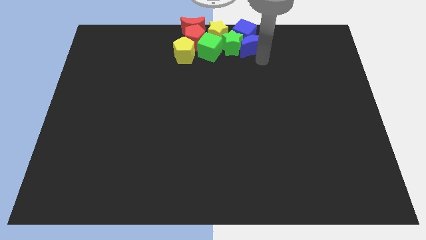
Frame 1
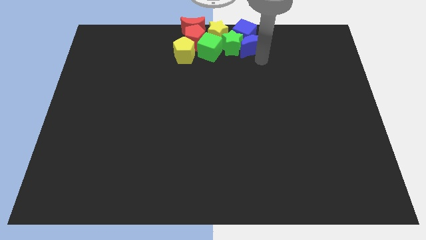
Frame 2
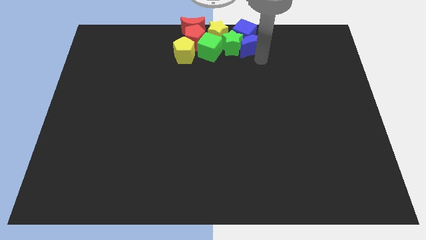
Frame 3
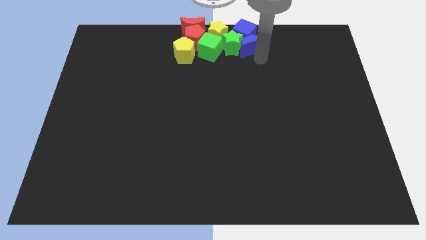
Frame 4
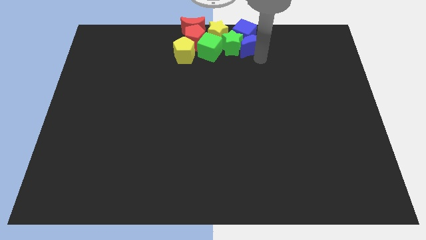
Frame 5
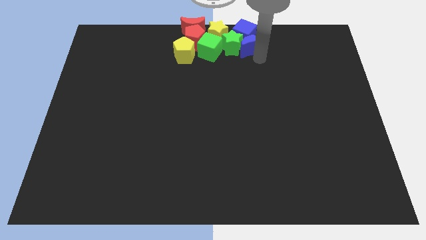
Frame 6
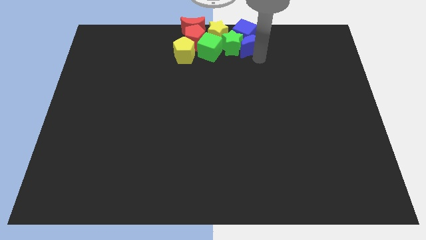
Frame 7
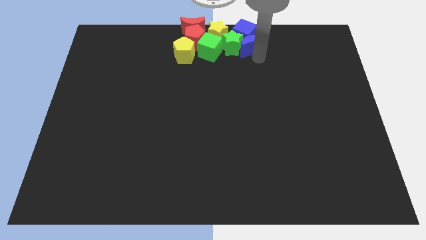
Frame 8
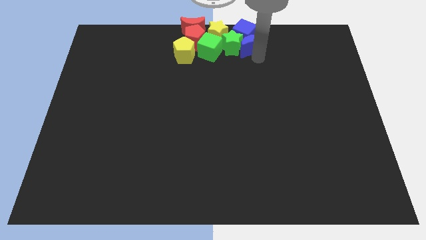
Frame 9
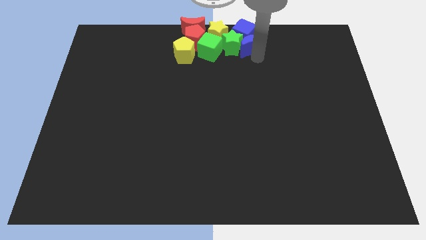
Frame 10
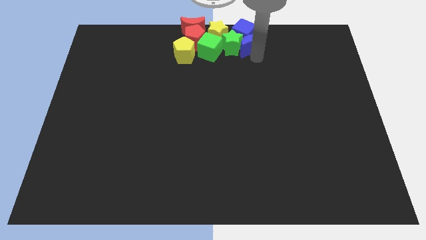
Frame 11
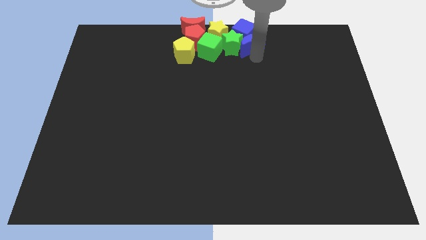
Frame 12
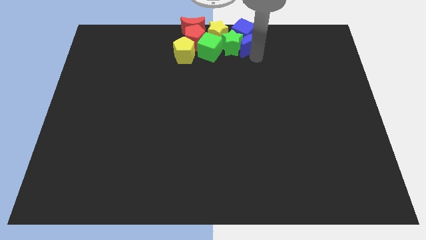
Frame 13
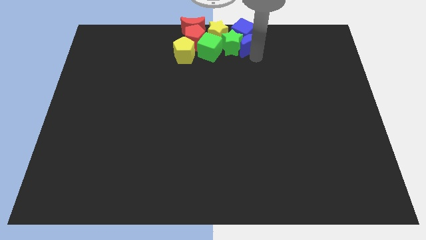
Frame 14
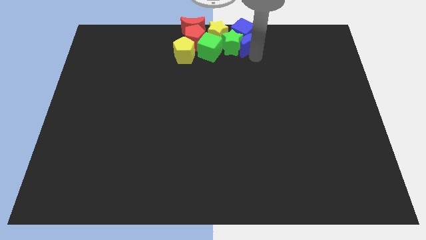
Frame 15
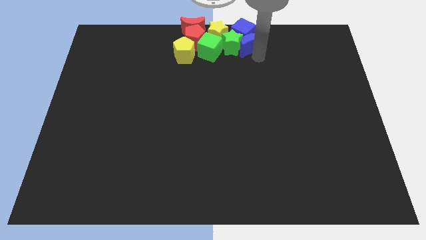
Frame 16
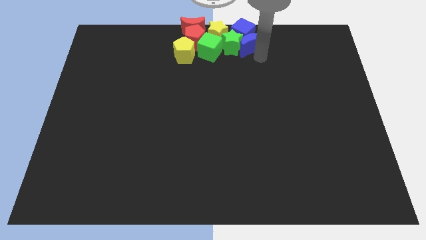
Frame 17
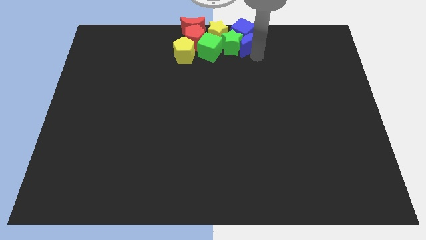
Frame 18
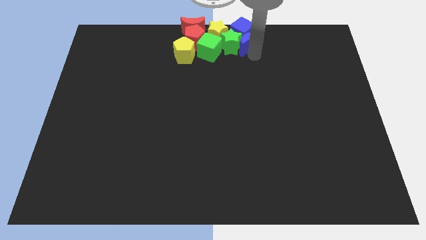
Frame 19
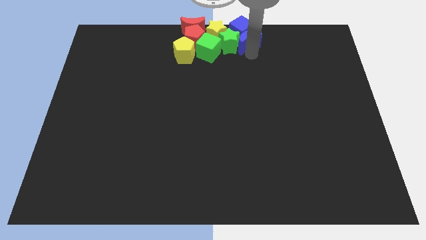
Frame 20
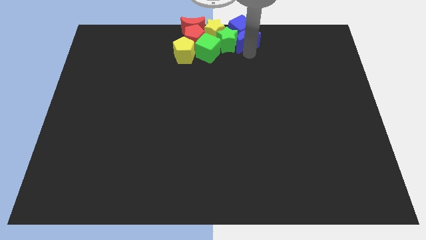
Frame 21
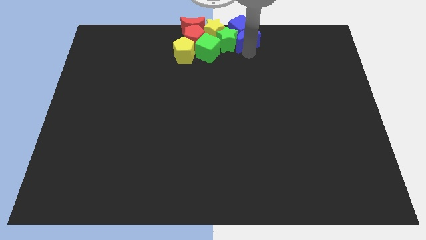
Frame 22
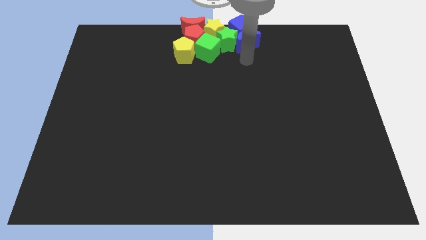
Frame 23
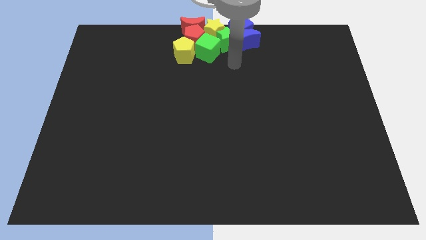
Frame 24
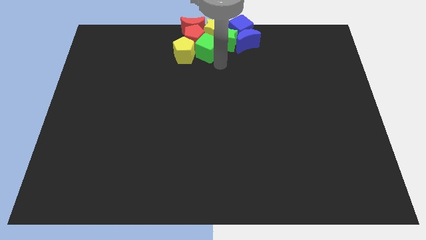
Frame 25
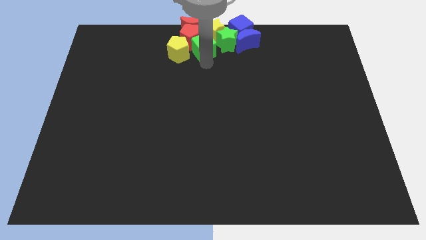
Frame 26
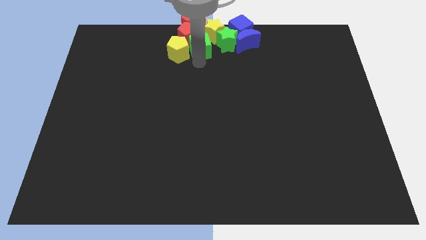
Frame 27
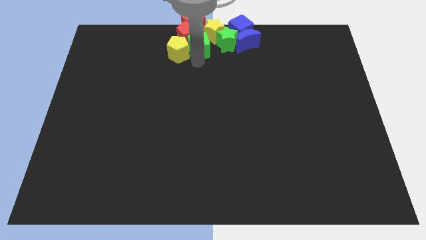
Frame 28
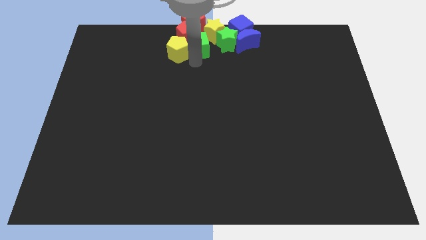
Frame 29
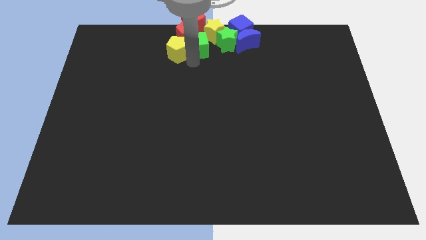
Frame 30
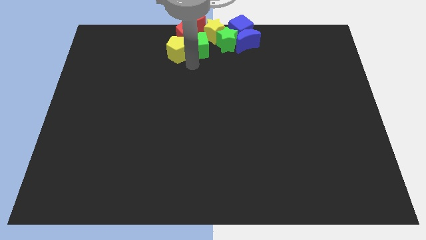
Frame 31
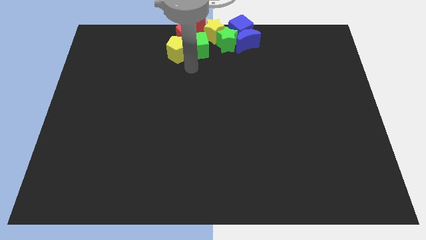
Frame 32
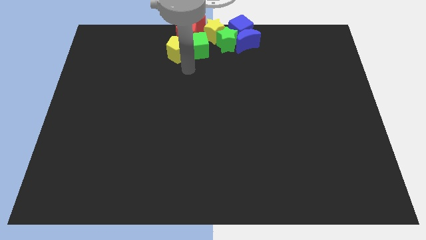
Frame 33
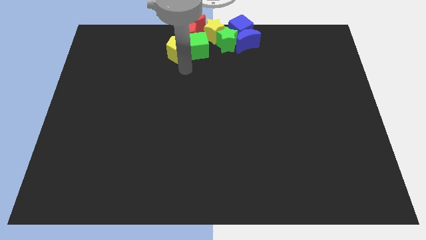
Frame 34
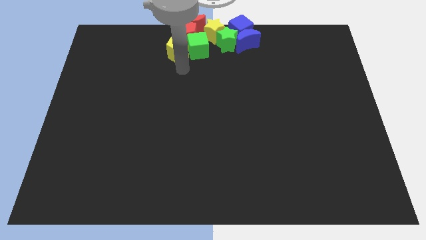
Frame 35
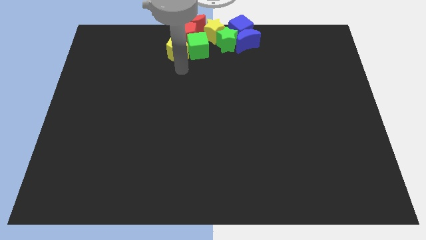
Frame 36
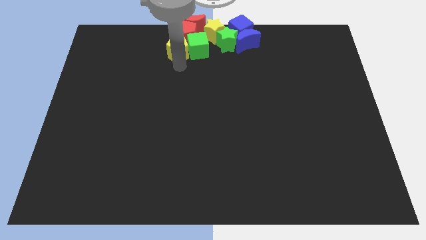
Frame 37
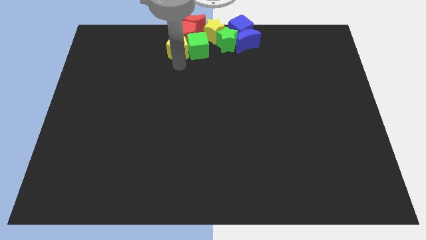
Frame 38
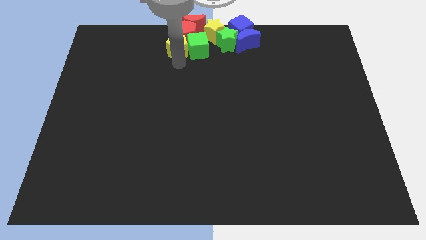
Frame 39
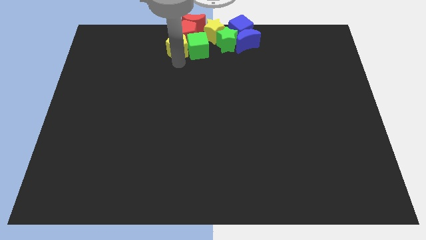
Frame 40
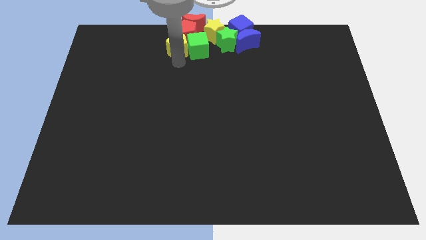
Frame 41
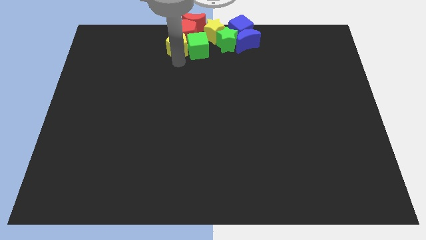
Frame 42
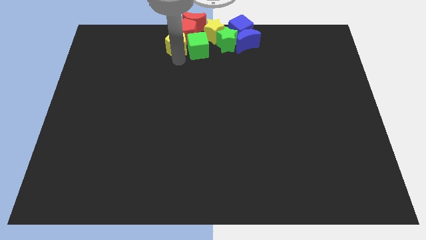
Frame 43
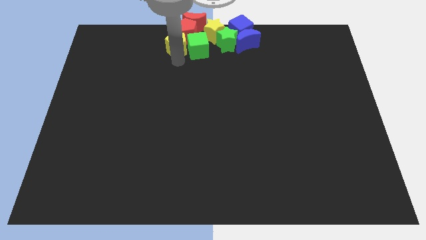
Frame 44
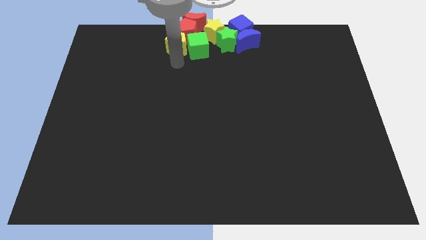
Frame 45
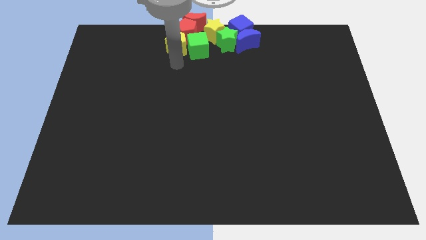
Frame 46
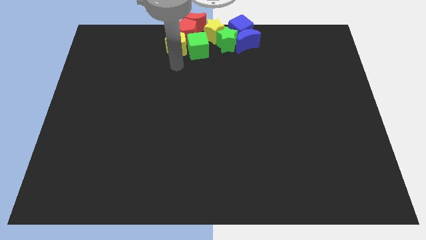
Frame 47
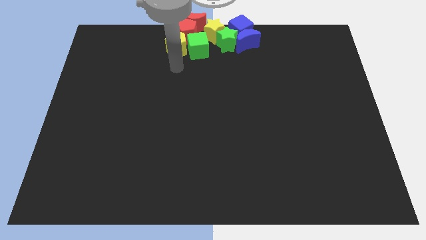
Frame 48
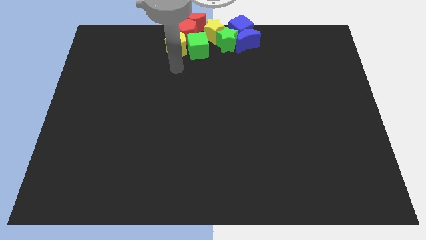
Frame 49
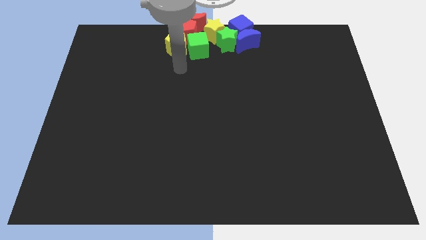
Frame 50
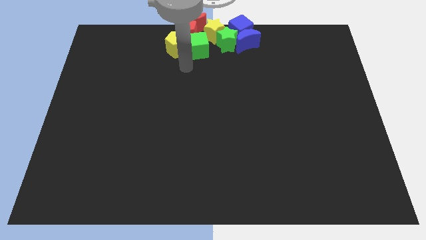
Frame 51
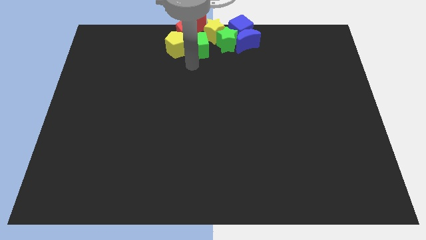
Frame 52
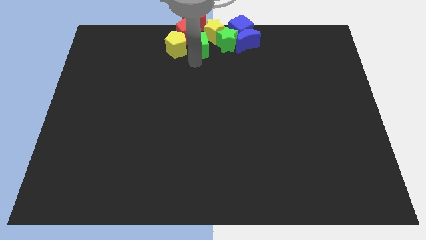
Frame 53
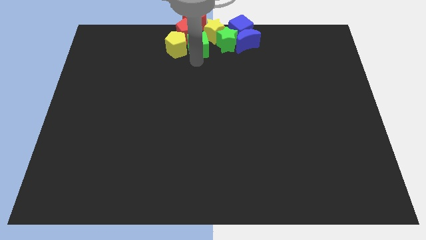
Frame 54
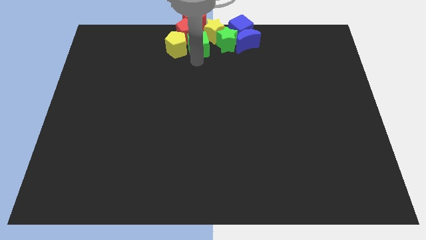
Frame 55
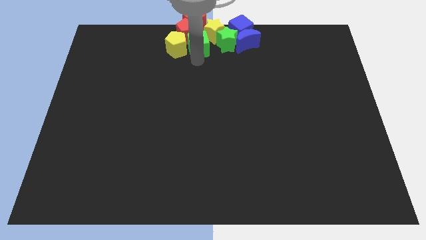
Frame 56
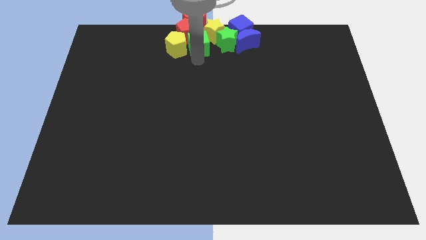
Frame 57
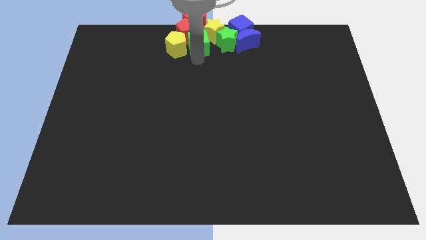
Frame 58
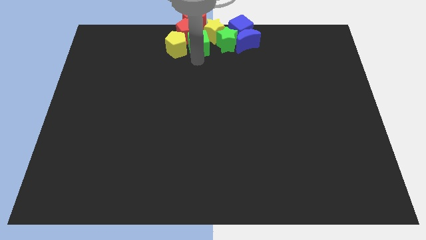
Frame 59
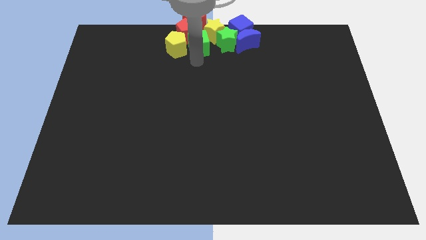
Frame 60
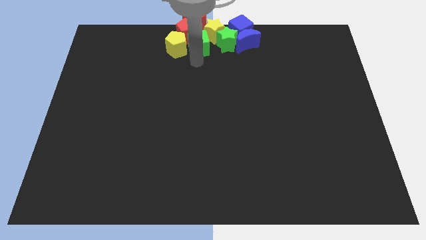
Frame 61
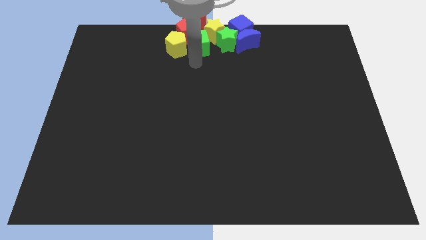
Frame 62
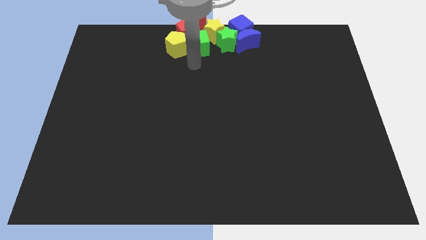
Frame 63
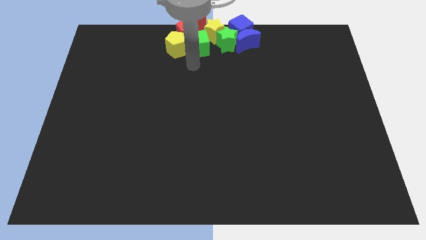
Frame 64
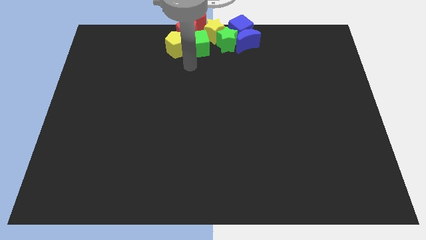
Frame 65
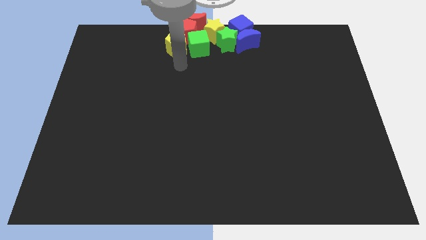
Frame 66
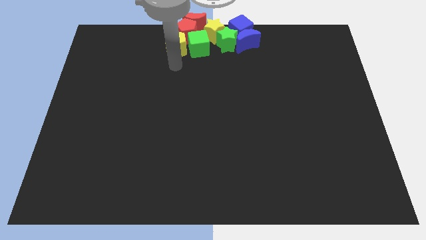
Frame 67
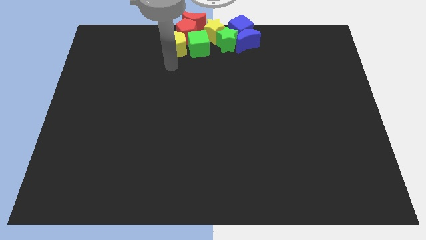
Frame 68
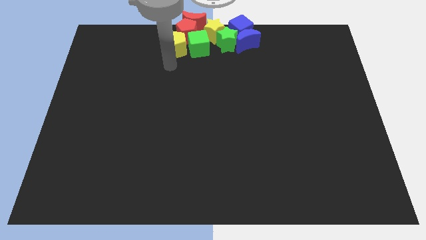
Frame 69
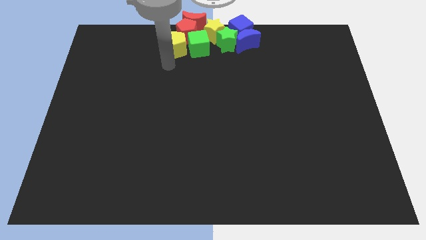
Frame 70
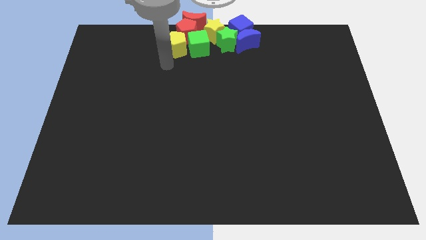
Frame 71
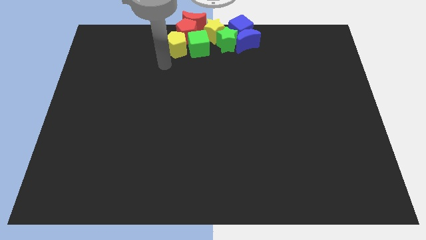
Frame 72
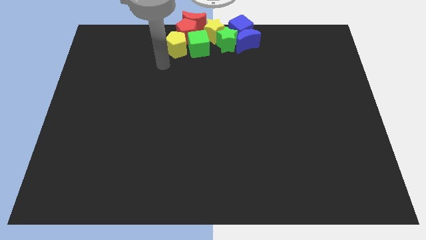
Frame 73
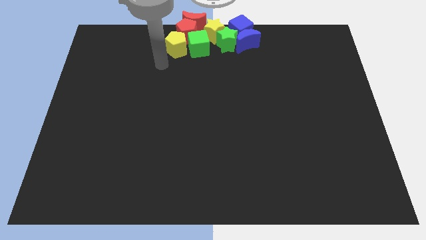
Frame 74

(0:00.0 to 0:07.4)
adjust the yellow pentagona and the green cube

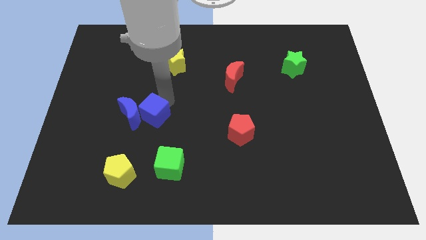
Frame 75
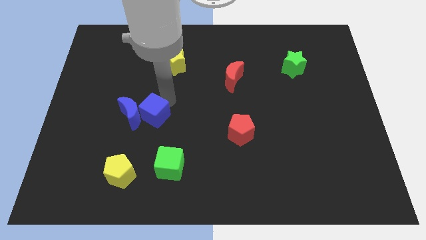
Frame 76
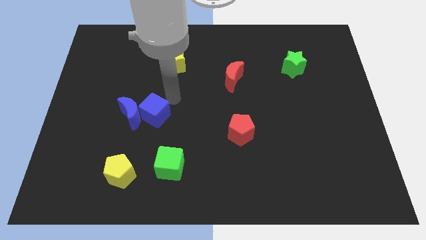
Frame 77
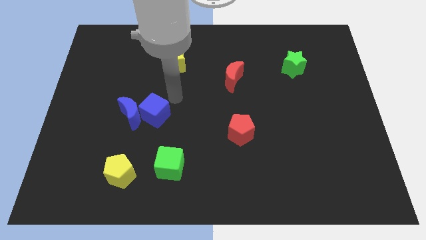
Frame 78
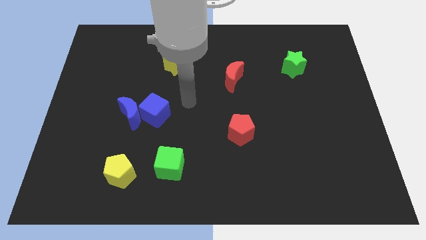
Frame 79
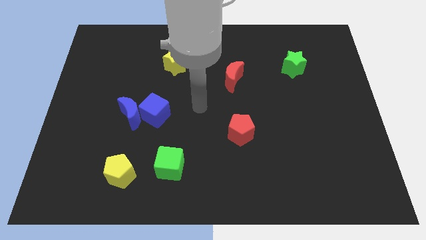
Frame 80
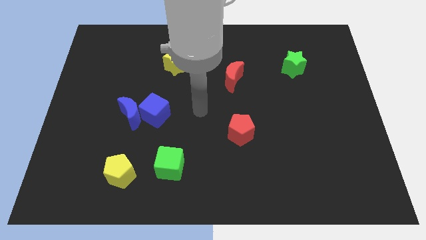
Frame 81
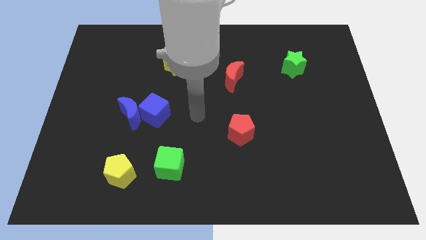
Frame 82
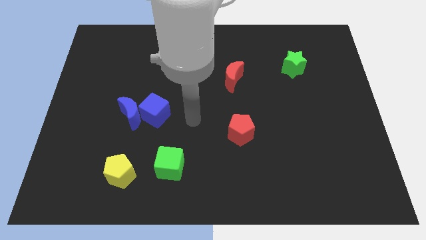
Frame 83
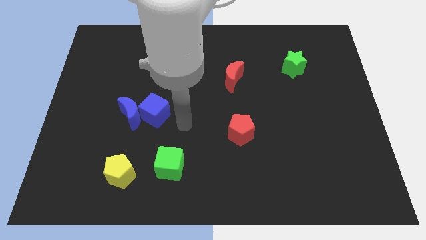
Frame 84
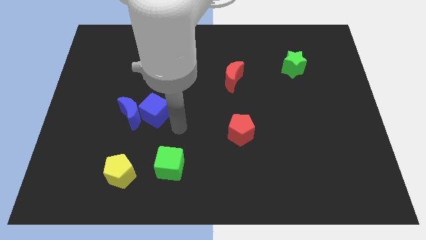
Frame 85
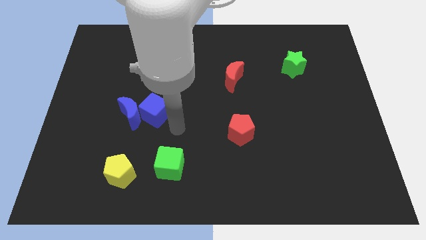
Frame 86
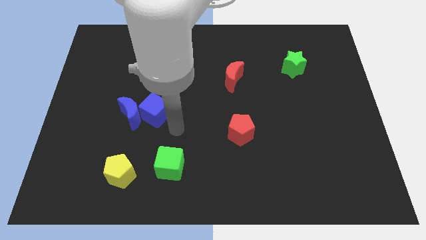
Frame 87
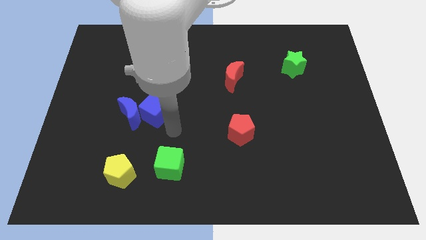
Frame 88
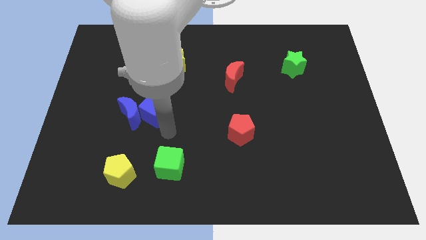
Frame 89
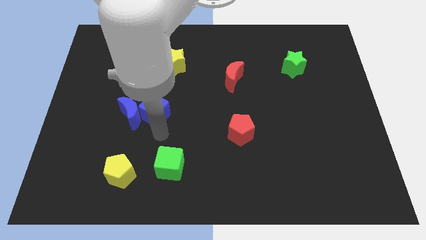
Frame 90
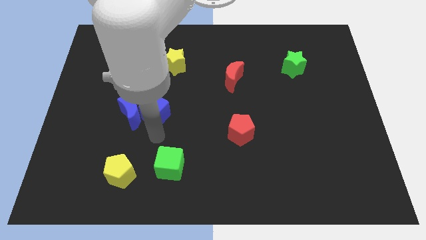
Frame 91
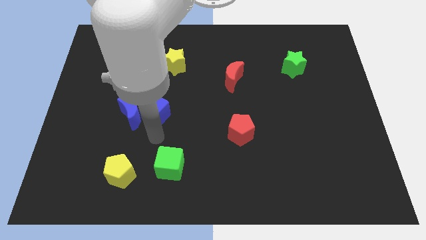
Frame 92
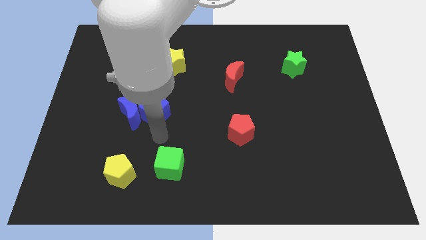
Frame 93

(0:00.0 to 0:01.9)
move the blue blocks slightly to the left
